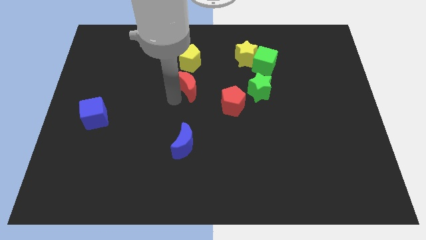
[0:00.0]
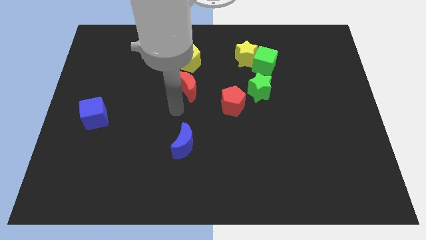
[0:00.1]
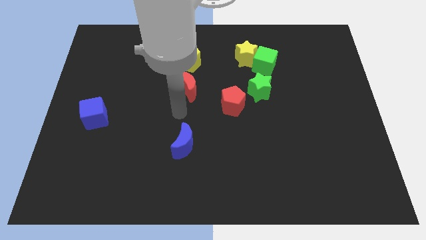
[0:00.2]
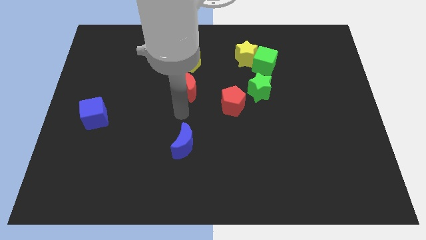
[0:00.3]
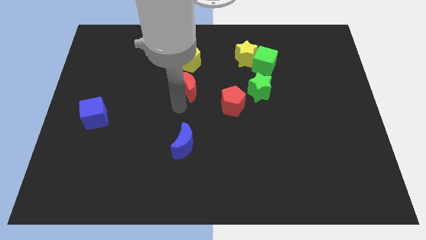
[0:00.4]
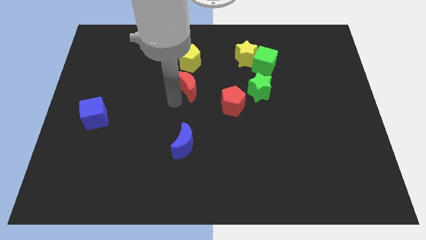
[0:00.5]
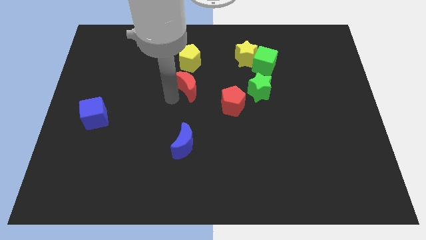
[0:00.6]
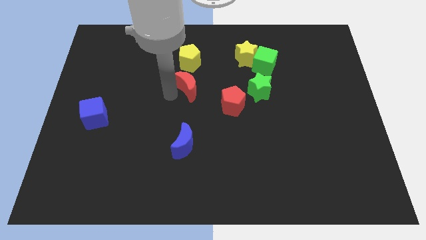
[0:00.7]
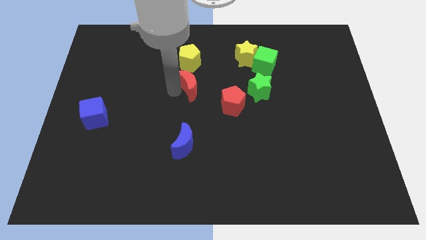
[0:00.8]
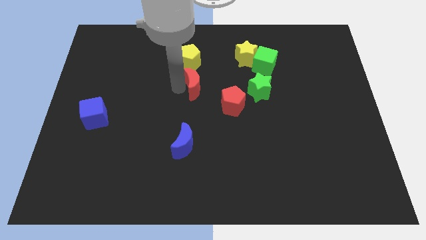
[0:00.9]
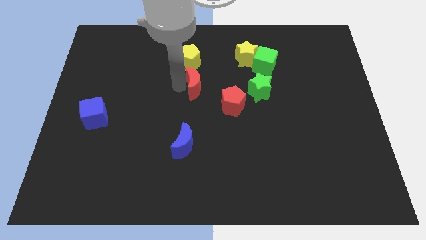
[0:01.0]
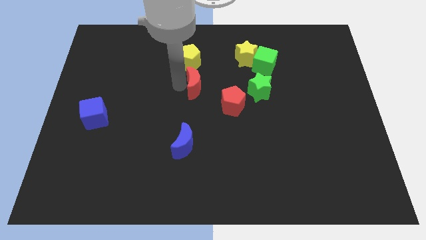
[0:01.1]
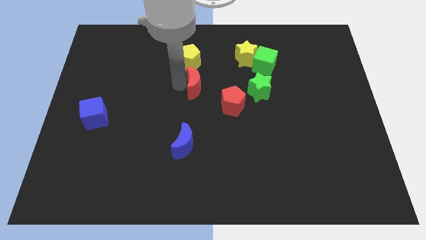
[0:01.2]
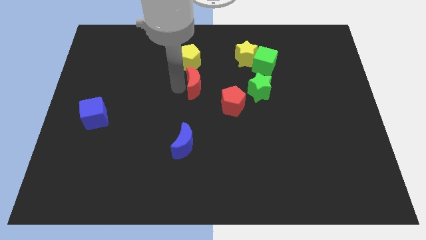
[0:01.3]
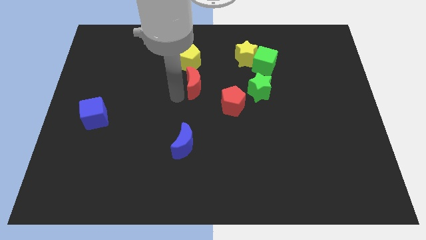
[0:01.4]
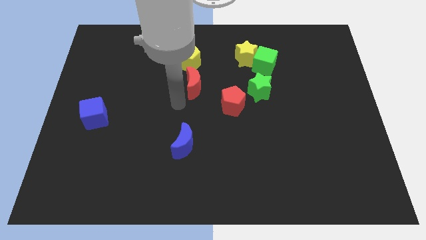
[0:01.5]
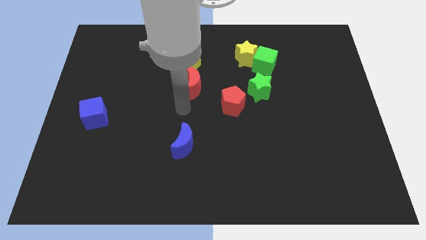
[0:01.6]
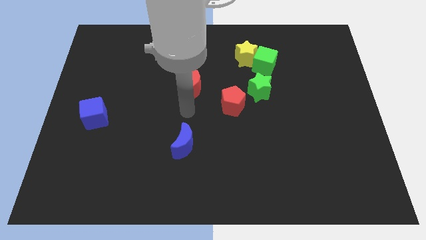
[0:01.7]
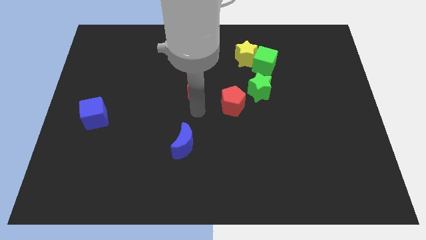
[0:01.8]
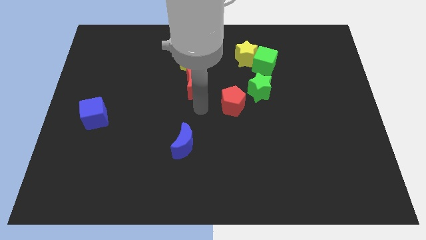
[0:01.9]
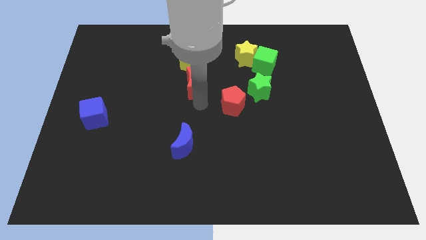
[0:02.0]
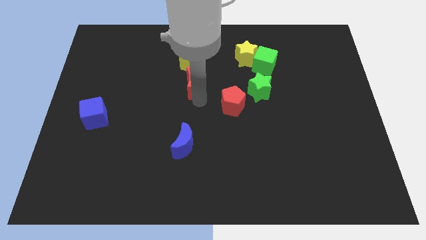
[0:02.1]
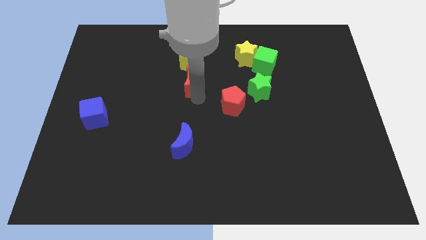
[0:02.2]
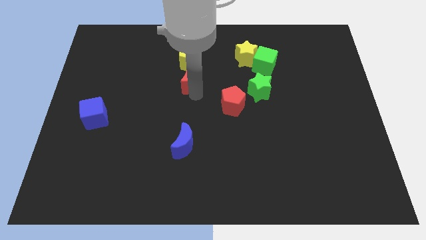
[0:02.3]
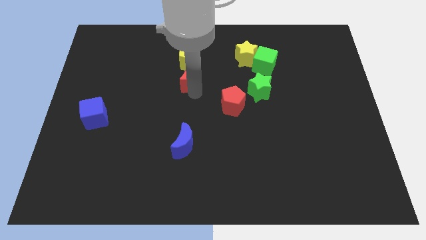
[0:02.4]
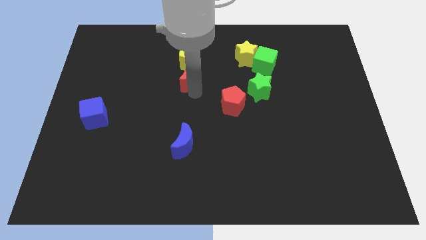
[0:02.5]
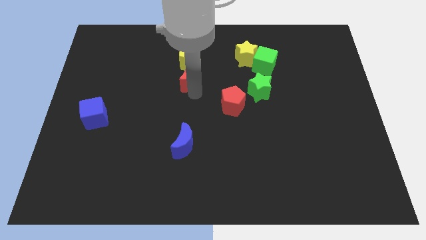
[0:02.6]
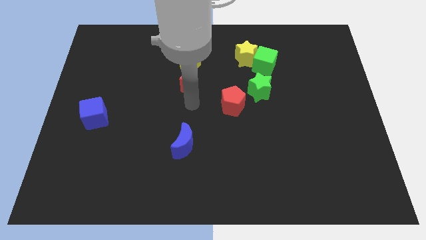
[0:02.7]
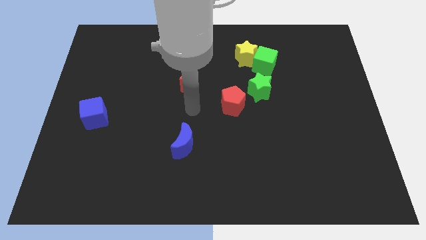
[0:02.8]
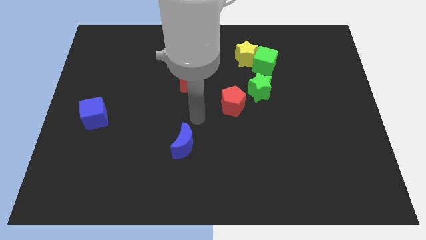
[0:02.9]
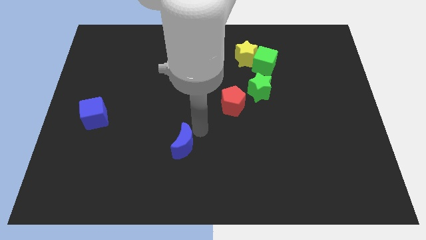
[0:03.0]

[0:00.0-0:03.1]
push the red moon into the yellow pentagon

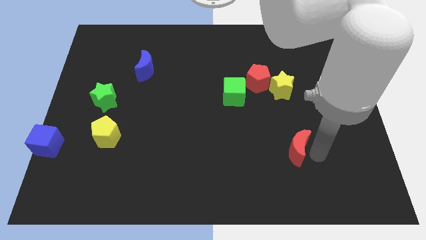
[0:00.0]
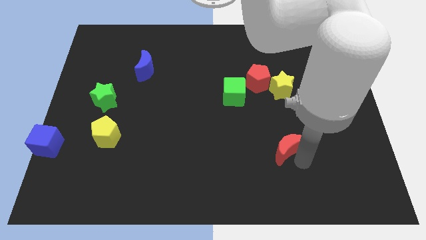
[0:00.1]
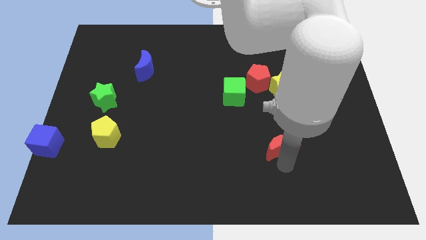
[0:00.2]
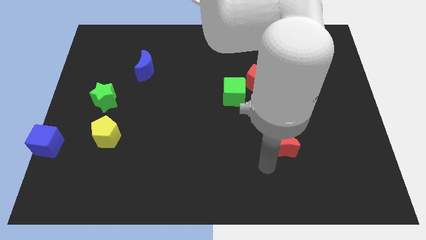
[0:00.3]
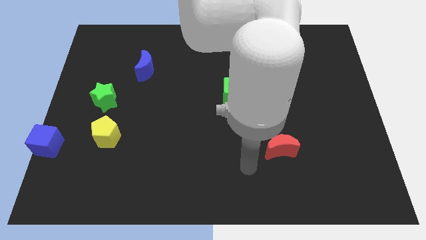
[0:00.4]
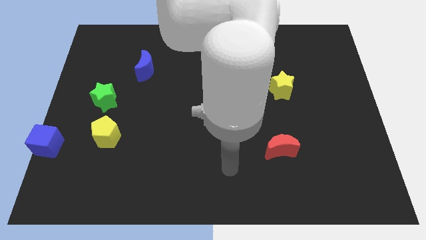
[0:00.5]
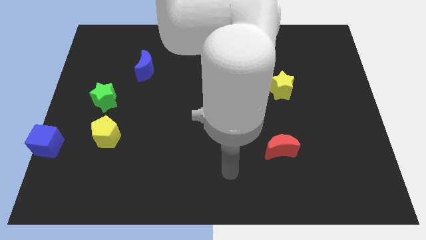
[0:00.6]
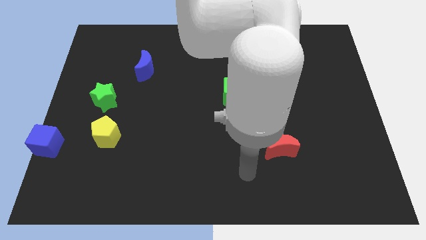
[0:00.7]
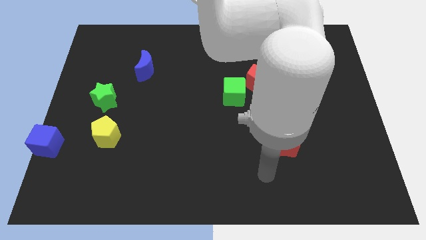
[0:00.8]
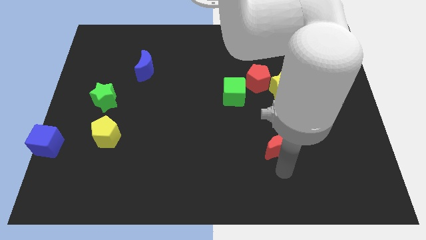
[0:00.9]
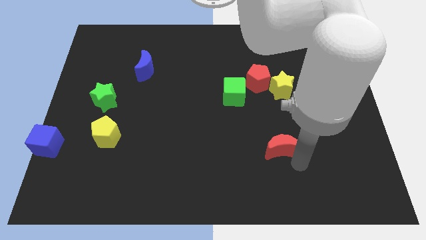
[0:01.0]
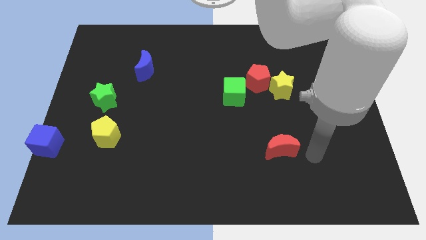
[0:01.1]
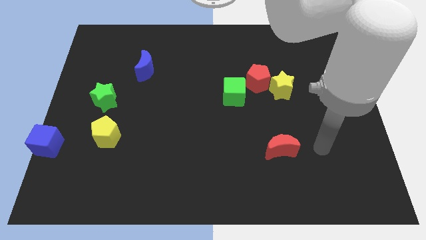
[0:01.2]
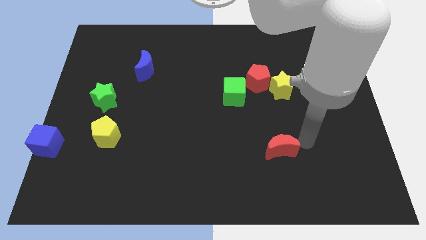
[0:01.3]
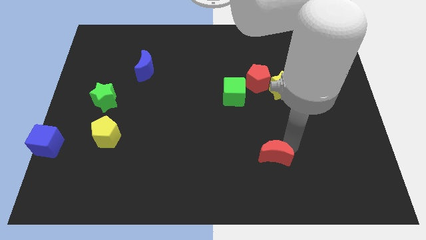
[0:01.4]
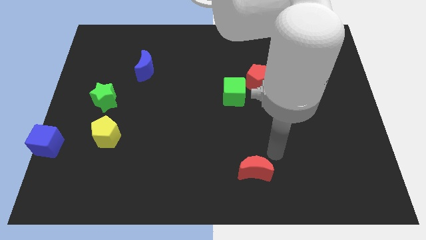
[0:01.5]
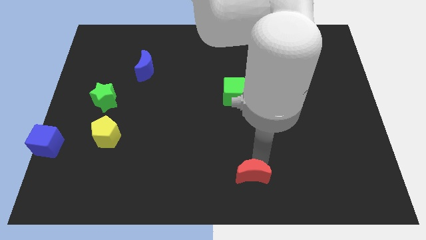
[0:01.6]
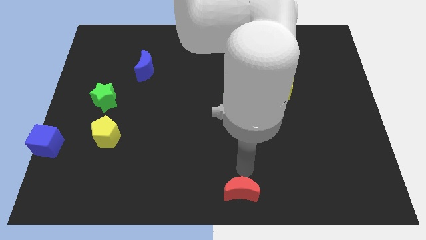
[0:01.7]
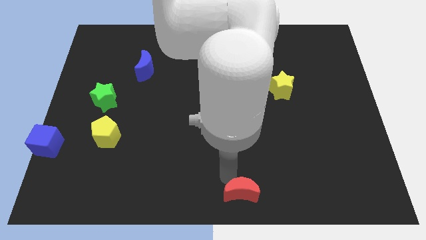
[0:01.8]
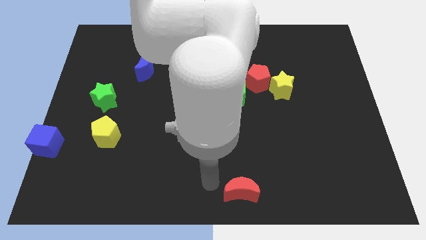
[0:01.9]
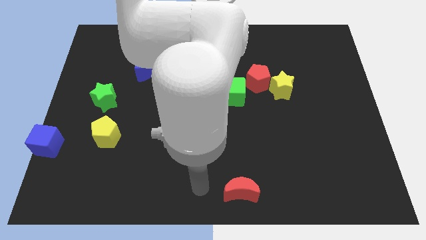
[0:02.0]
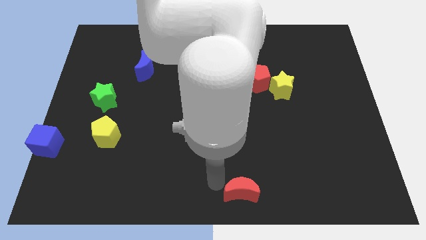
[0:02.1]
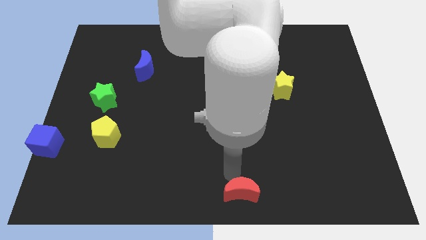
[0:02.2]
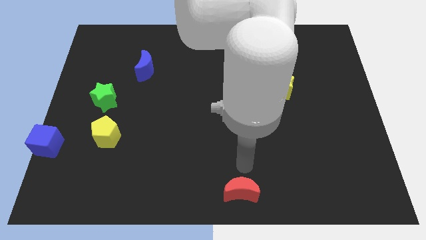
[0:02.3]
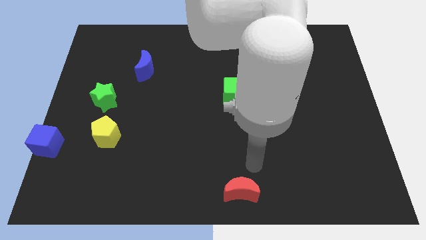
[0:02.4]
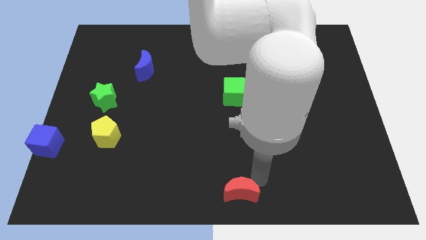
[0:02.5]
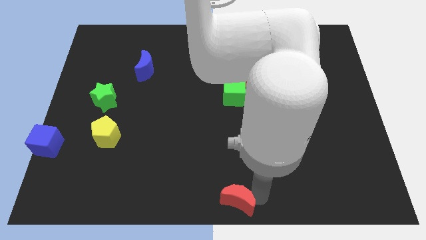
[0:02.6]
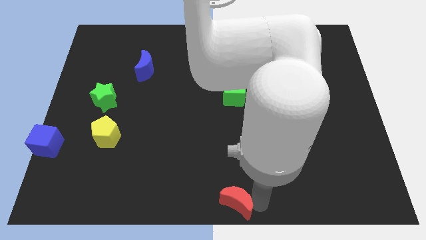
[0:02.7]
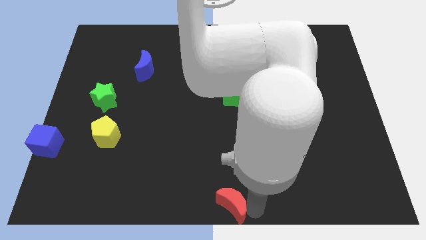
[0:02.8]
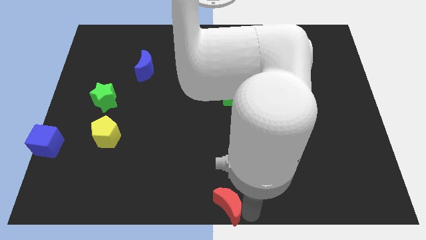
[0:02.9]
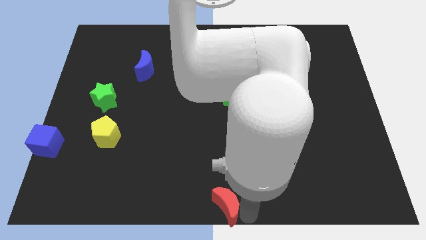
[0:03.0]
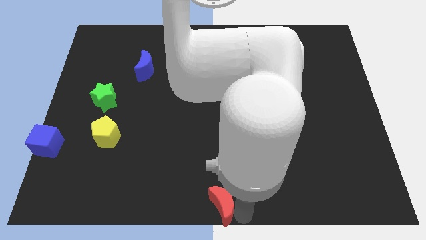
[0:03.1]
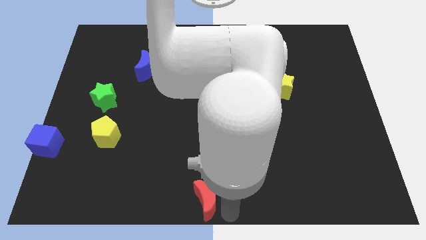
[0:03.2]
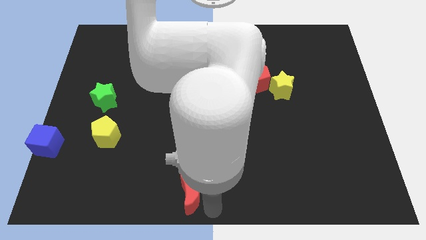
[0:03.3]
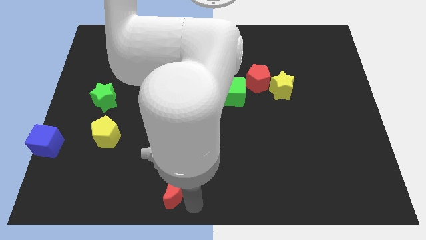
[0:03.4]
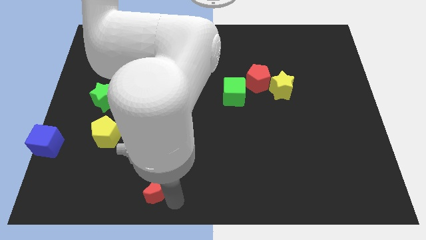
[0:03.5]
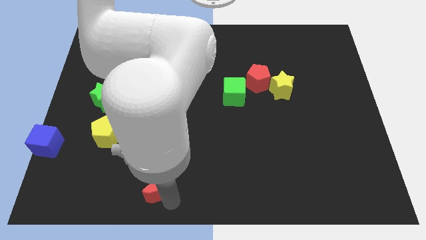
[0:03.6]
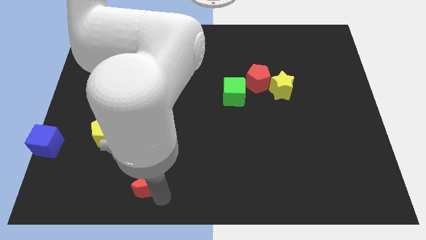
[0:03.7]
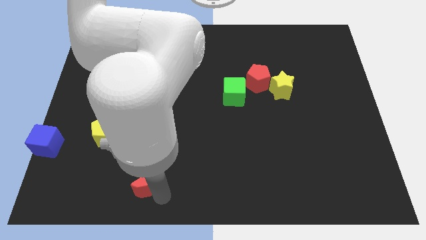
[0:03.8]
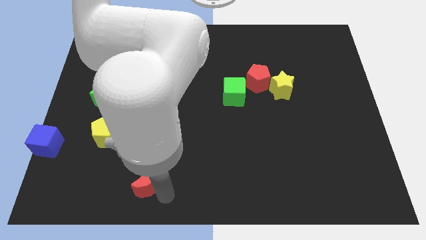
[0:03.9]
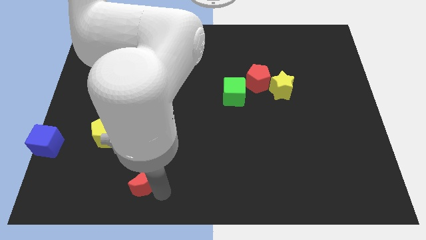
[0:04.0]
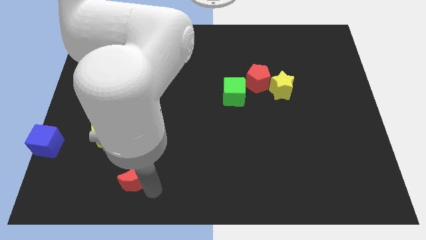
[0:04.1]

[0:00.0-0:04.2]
push red moon towards yellow pentagon

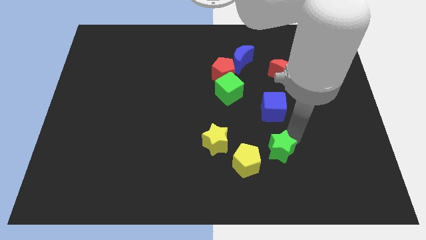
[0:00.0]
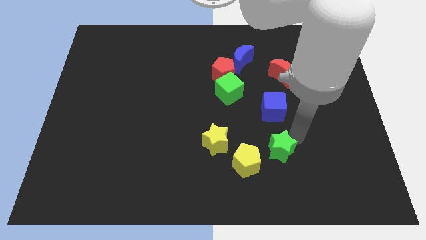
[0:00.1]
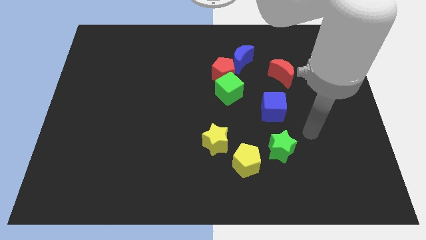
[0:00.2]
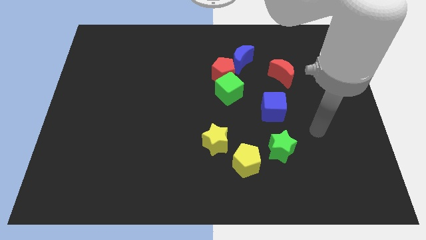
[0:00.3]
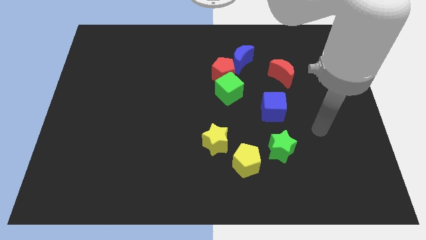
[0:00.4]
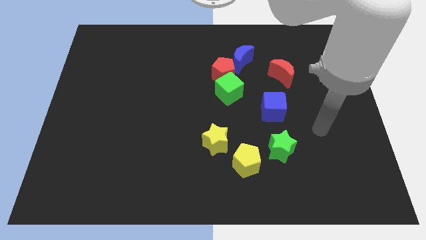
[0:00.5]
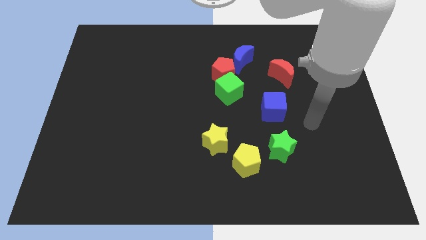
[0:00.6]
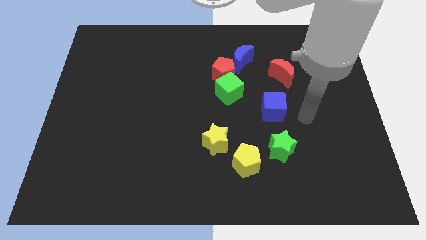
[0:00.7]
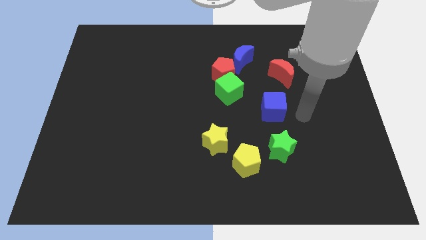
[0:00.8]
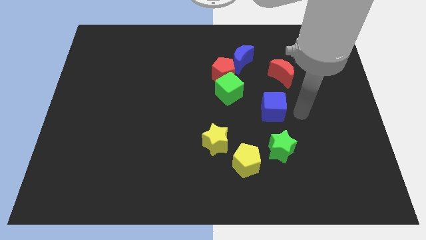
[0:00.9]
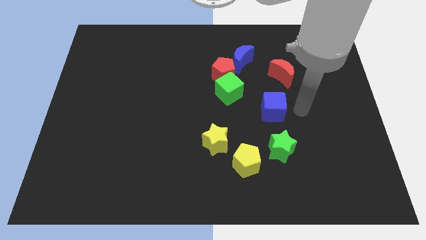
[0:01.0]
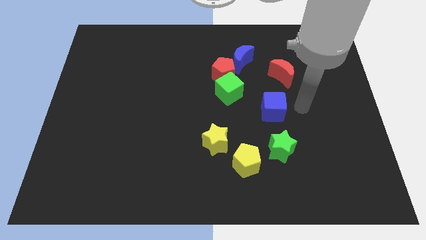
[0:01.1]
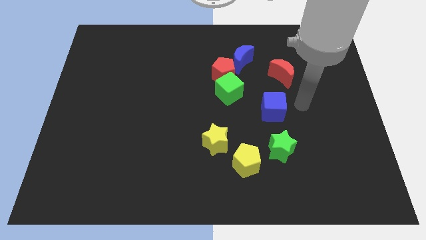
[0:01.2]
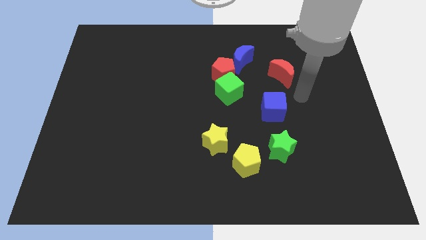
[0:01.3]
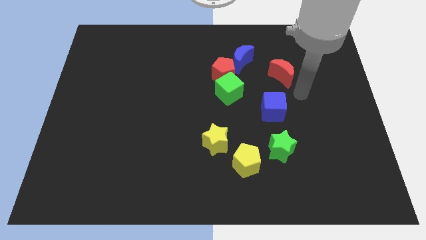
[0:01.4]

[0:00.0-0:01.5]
move your hand away from the green star

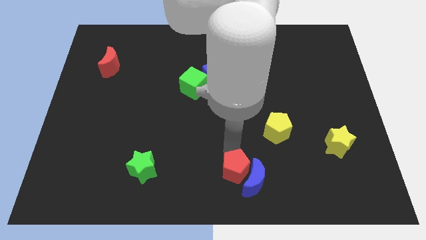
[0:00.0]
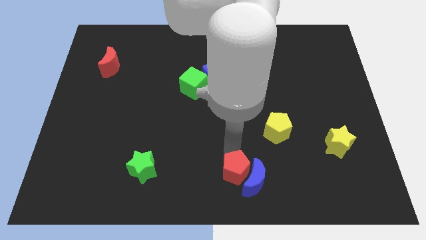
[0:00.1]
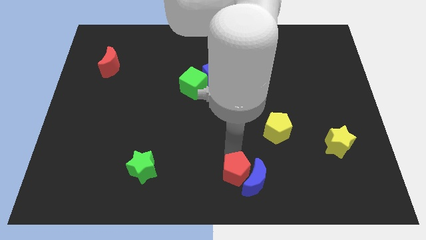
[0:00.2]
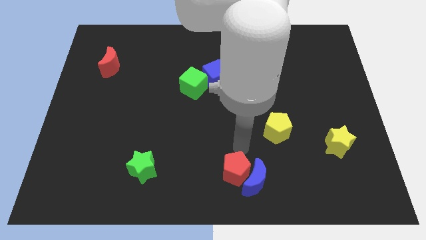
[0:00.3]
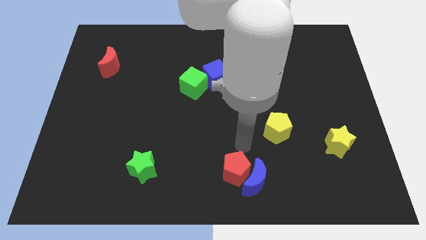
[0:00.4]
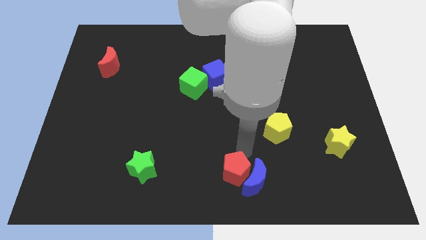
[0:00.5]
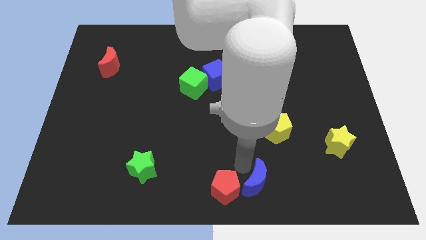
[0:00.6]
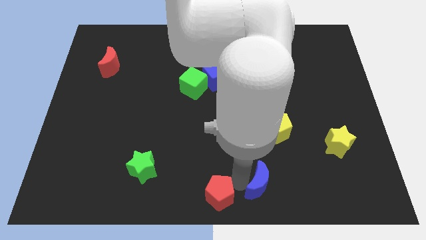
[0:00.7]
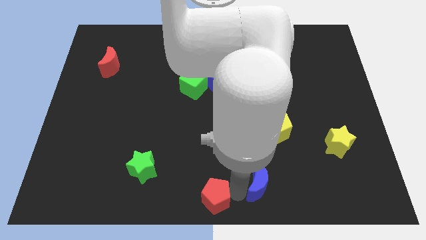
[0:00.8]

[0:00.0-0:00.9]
touch blue crescent with red pentagon
